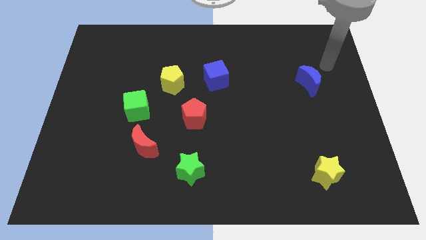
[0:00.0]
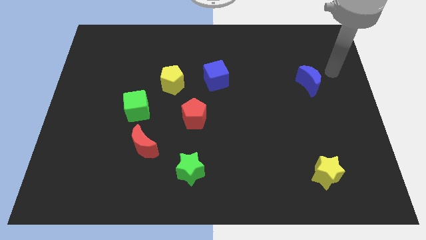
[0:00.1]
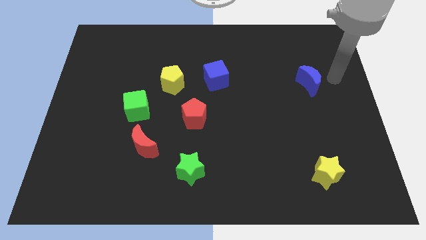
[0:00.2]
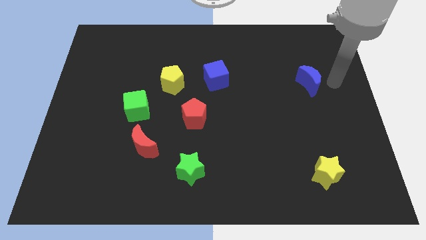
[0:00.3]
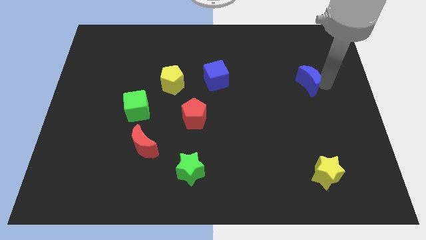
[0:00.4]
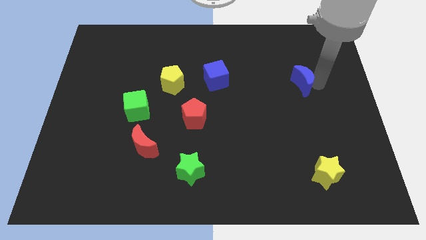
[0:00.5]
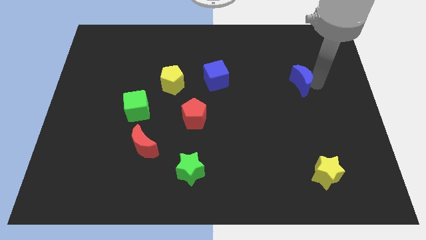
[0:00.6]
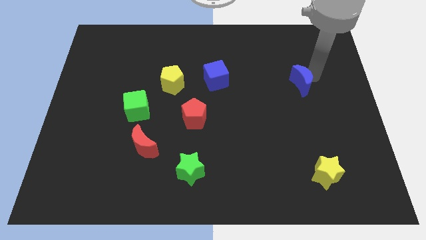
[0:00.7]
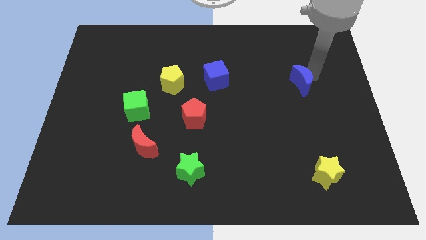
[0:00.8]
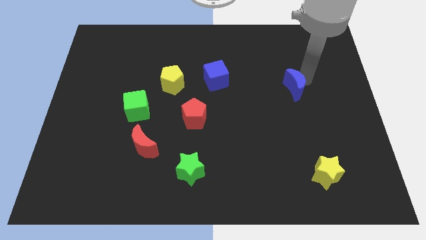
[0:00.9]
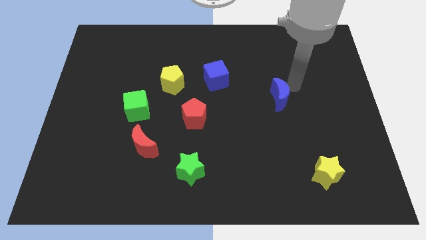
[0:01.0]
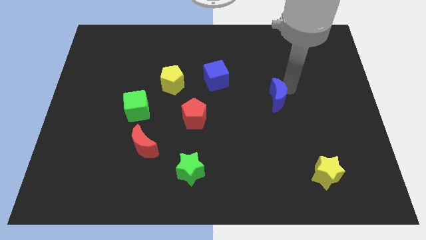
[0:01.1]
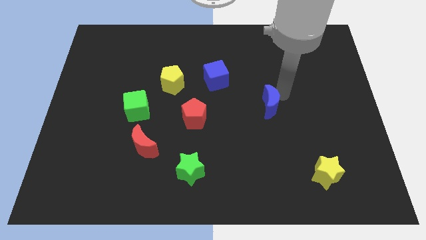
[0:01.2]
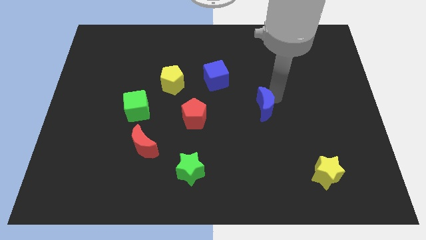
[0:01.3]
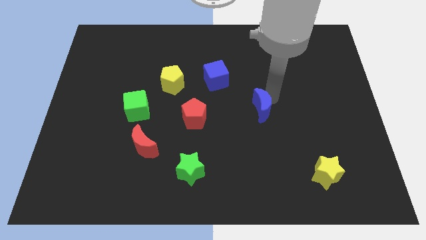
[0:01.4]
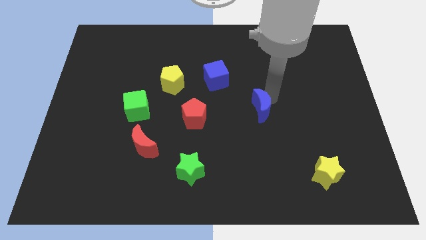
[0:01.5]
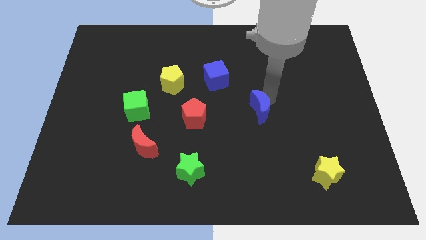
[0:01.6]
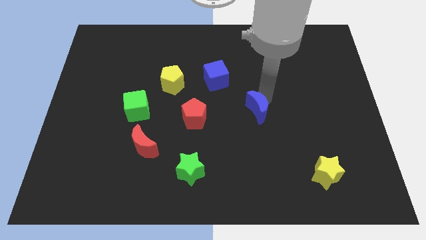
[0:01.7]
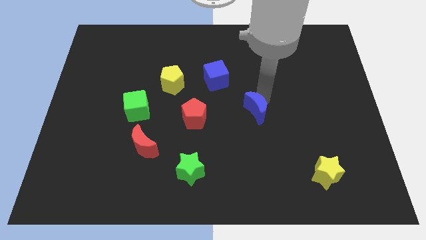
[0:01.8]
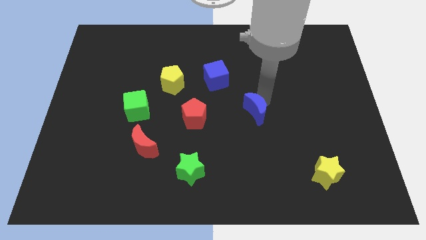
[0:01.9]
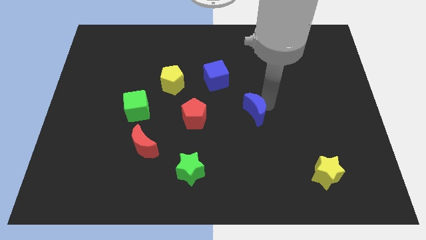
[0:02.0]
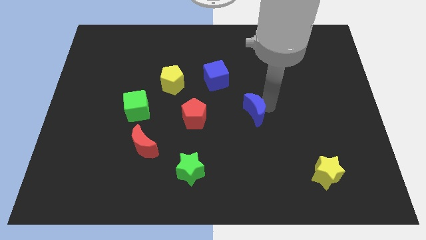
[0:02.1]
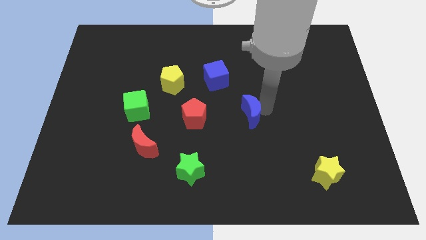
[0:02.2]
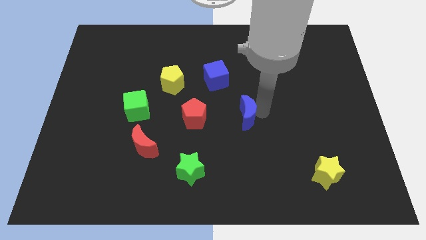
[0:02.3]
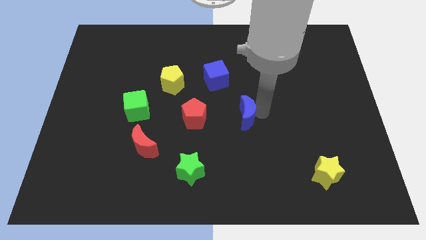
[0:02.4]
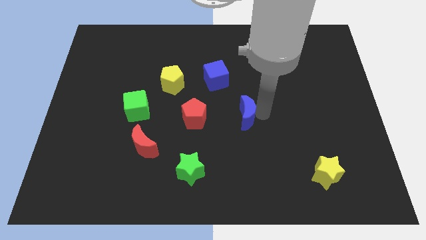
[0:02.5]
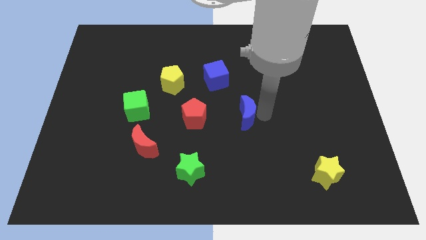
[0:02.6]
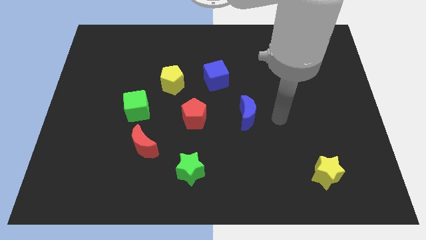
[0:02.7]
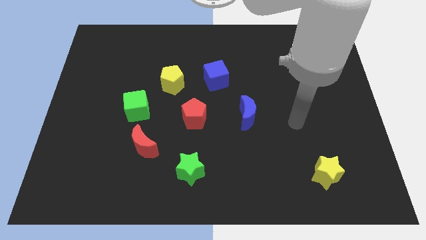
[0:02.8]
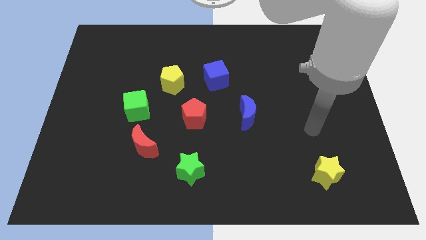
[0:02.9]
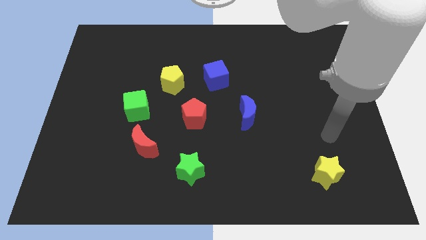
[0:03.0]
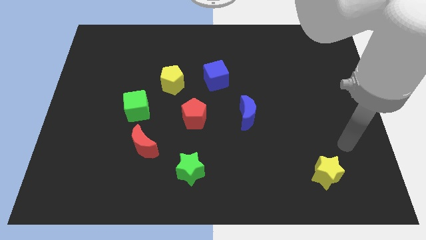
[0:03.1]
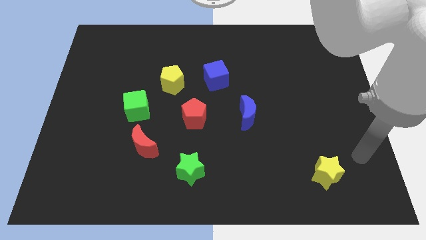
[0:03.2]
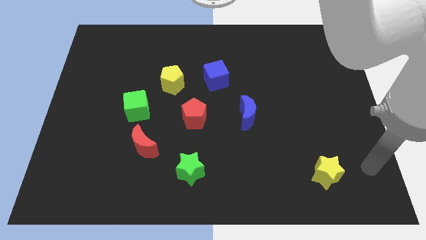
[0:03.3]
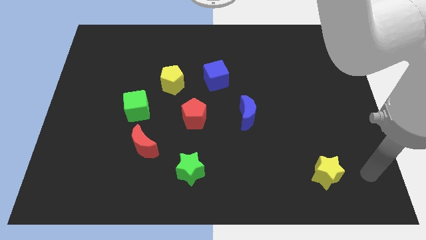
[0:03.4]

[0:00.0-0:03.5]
push the blue crescent horizontally to the red pentagon

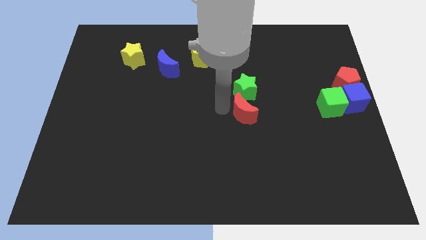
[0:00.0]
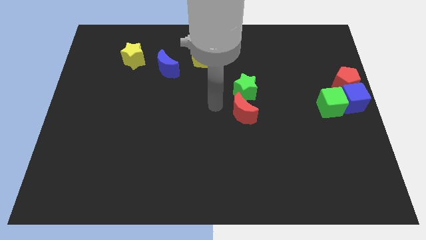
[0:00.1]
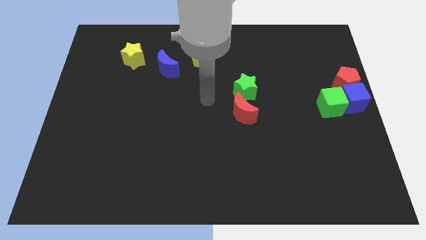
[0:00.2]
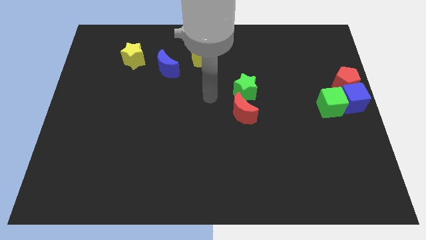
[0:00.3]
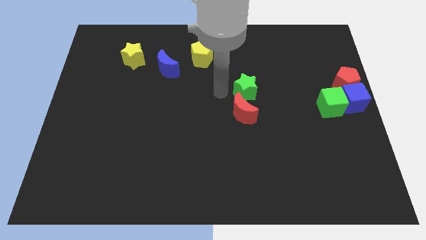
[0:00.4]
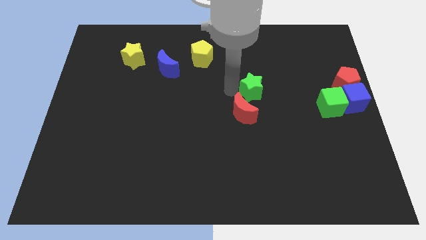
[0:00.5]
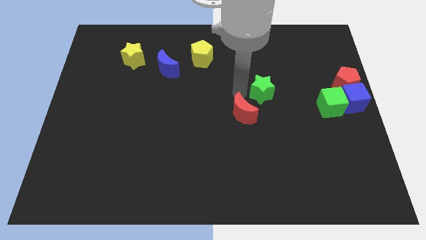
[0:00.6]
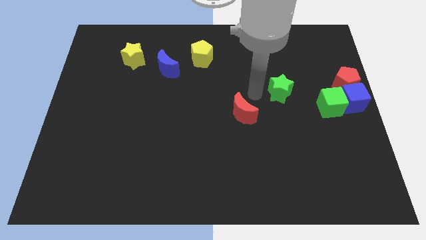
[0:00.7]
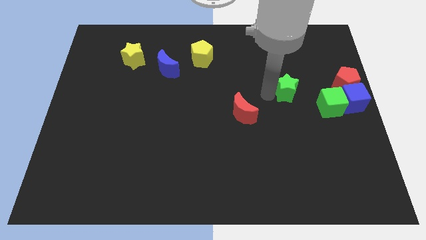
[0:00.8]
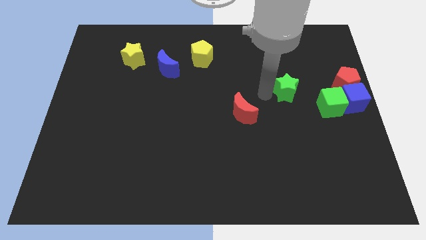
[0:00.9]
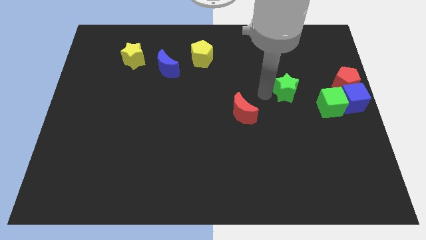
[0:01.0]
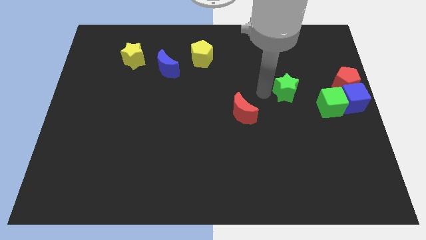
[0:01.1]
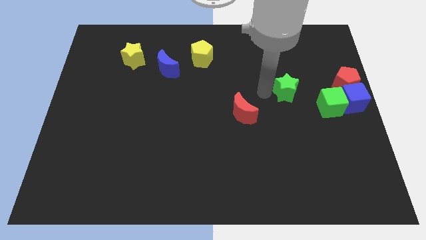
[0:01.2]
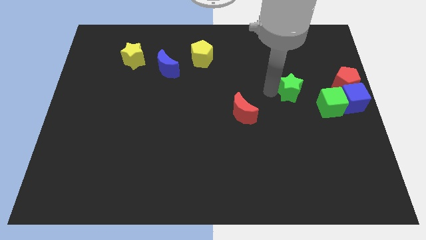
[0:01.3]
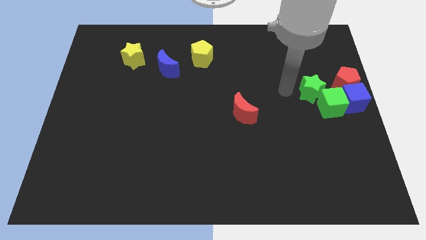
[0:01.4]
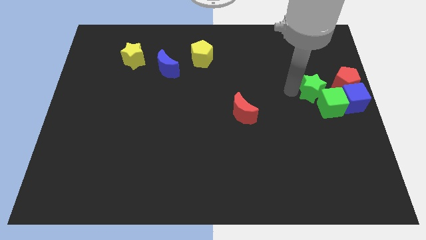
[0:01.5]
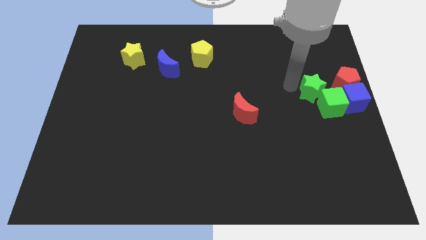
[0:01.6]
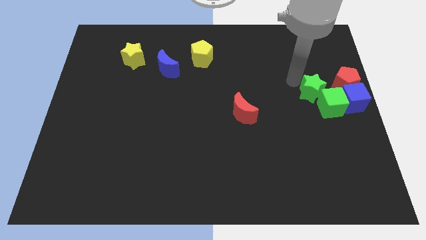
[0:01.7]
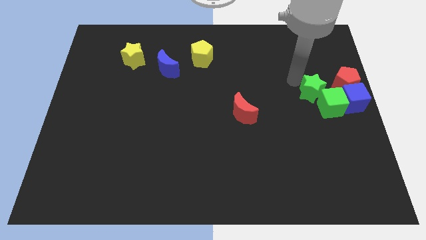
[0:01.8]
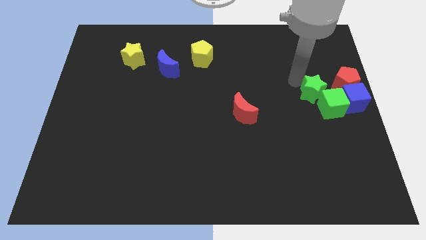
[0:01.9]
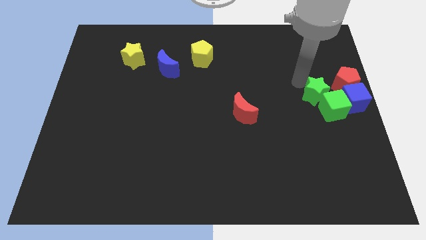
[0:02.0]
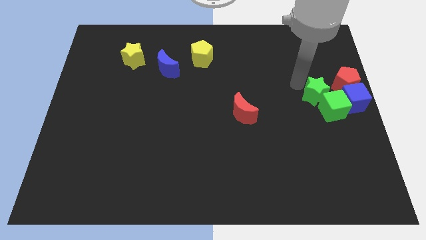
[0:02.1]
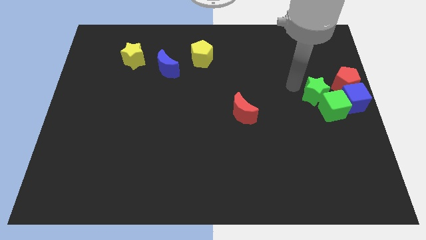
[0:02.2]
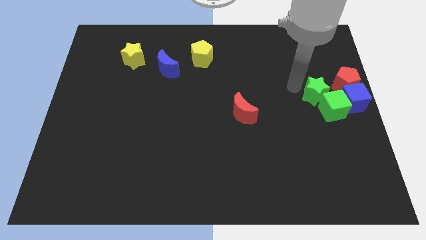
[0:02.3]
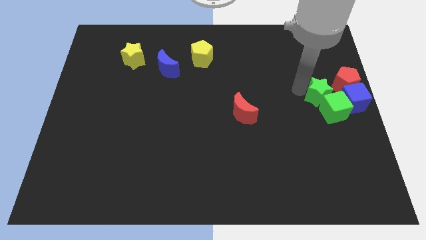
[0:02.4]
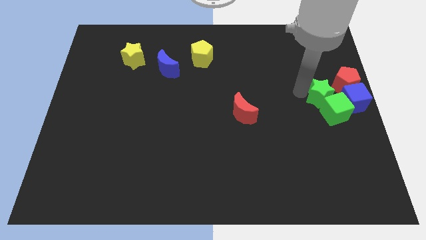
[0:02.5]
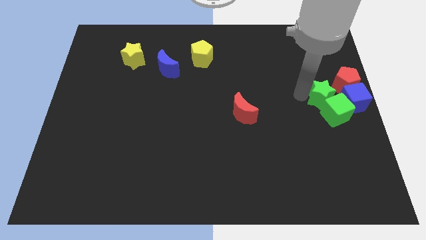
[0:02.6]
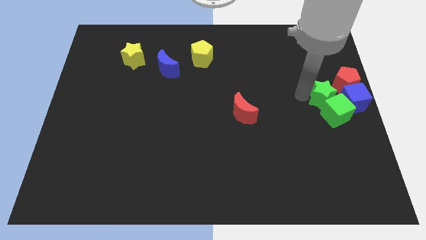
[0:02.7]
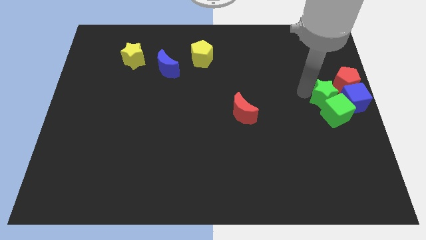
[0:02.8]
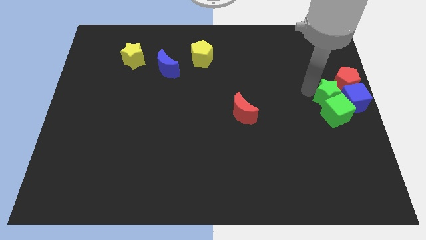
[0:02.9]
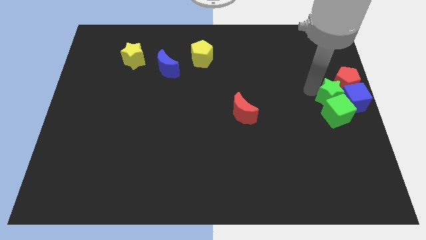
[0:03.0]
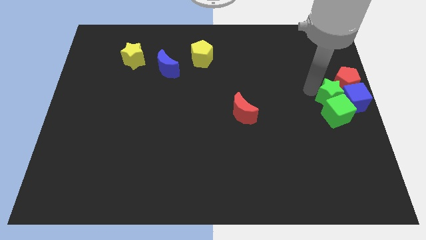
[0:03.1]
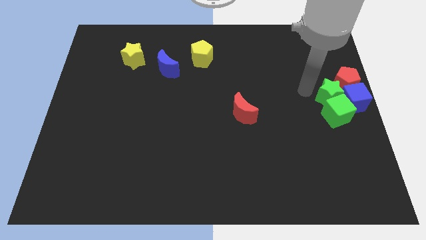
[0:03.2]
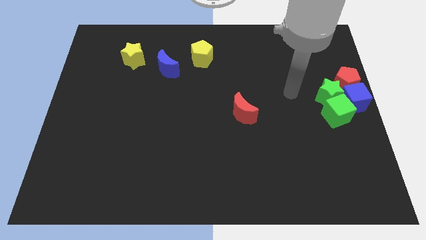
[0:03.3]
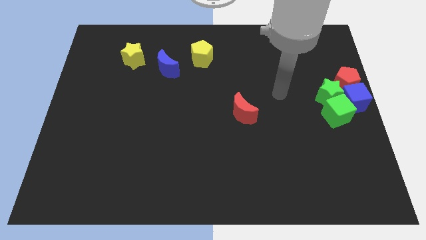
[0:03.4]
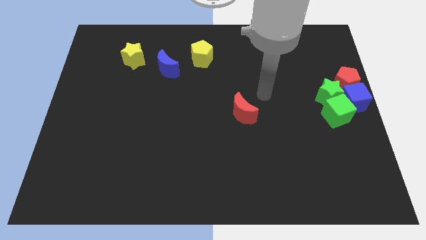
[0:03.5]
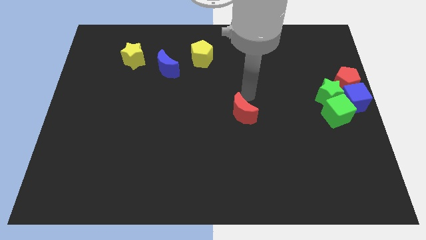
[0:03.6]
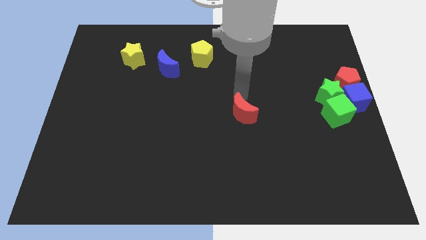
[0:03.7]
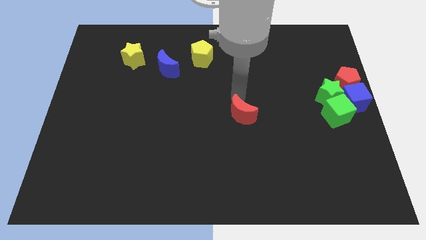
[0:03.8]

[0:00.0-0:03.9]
move the green star towards the top of green cube

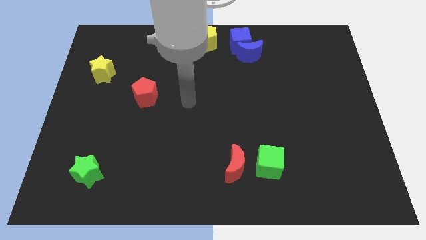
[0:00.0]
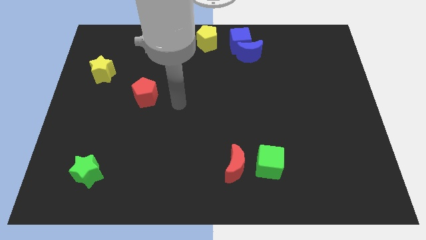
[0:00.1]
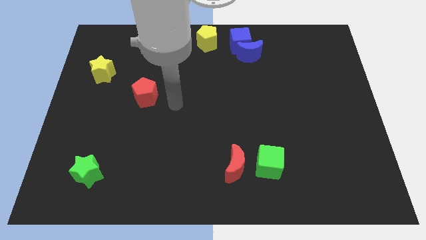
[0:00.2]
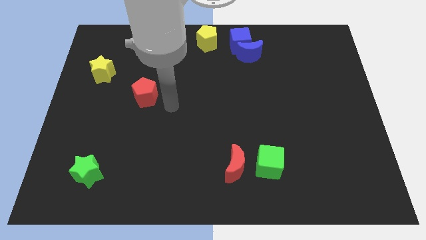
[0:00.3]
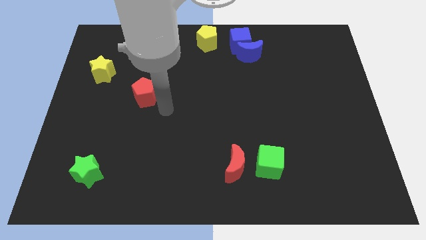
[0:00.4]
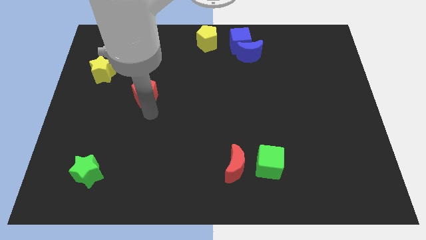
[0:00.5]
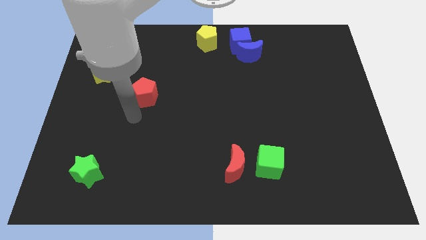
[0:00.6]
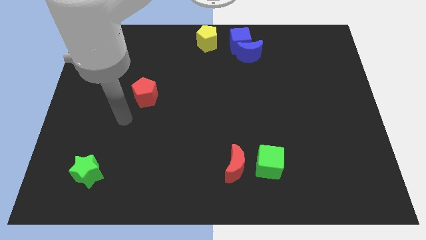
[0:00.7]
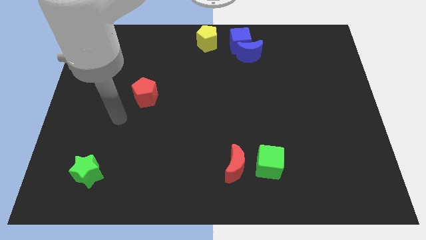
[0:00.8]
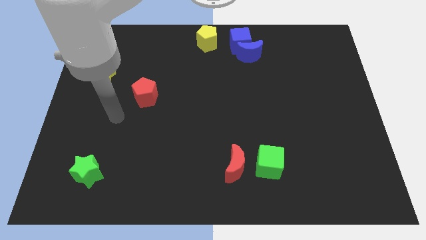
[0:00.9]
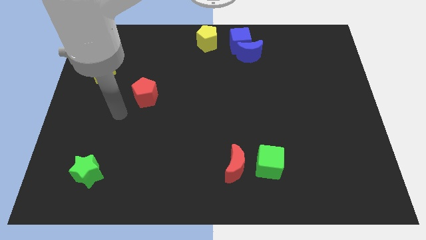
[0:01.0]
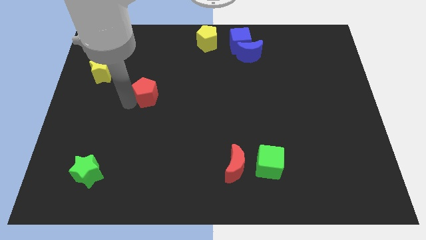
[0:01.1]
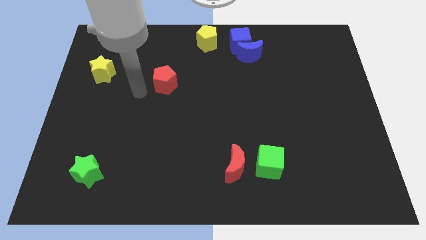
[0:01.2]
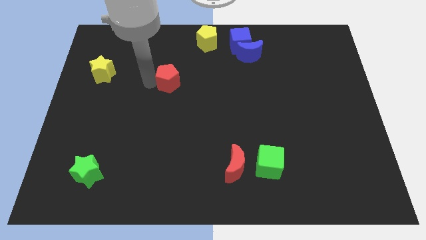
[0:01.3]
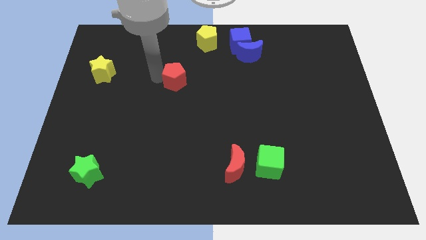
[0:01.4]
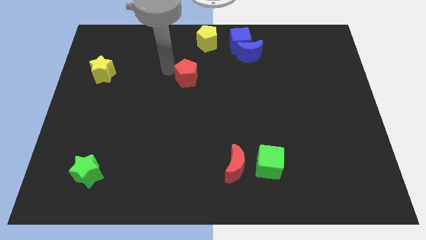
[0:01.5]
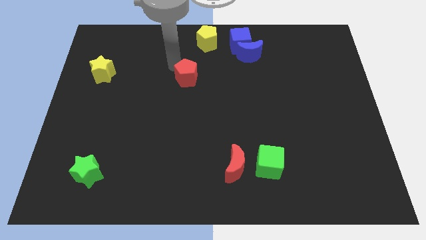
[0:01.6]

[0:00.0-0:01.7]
place the red pentagon parallel to yellow star
